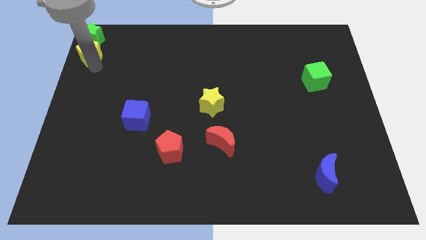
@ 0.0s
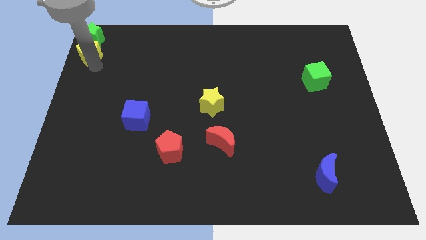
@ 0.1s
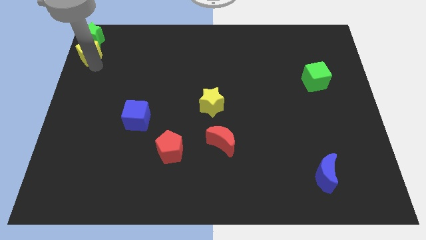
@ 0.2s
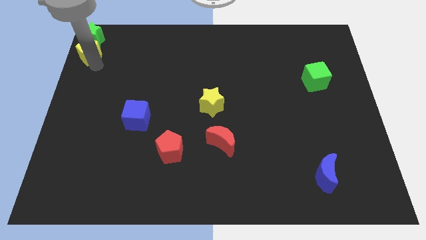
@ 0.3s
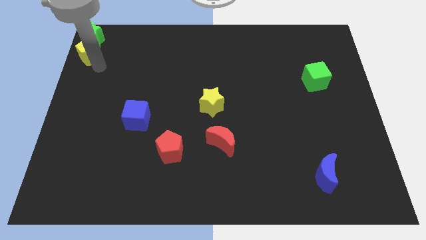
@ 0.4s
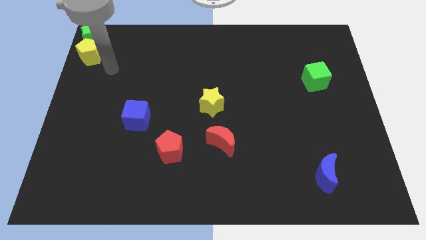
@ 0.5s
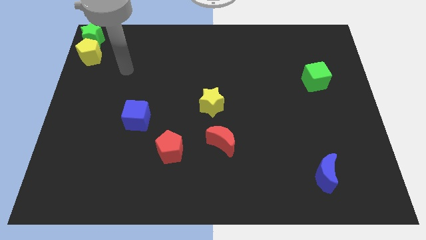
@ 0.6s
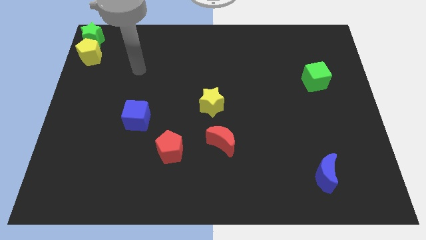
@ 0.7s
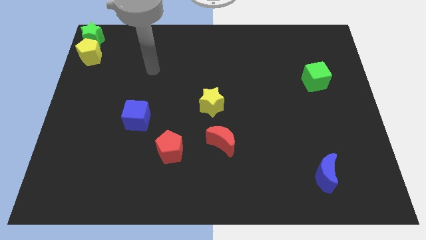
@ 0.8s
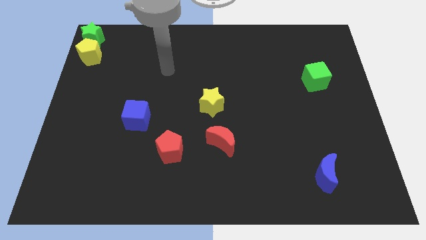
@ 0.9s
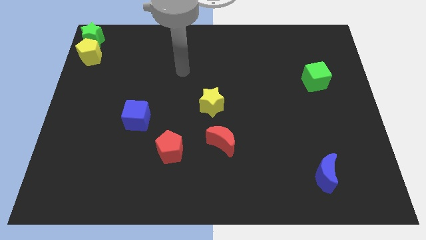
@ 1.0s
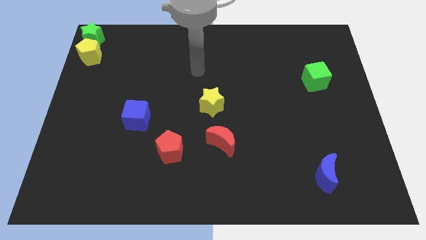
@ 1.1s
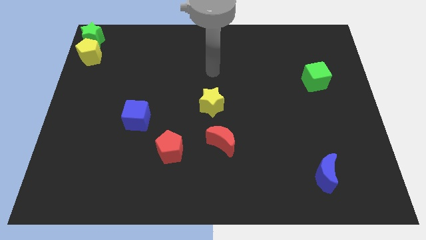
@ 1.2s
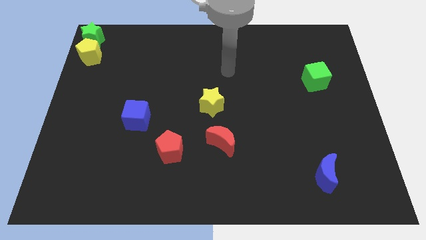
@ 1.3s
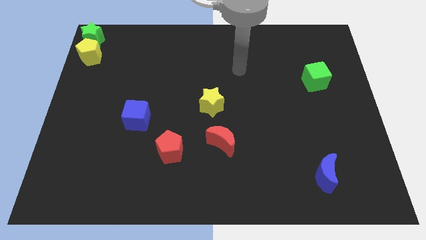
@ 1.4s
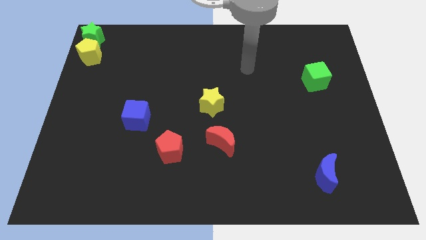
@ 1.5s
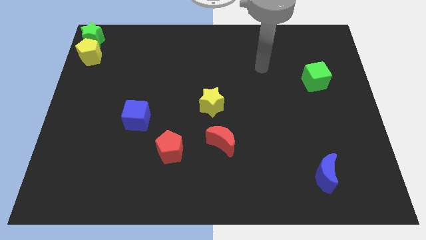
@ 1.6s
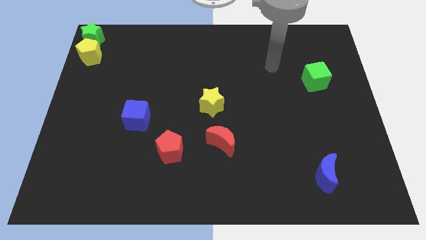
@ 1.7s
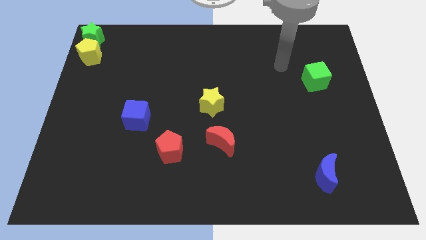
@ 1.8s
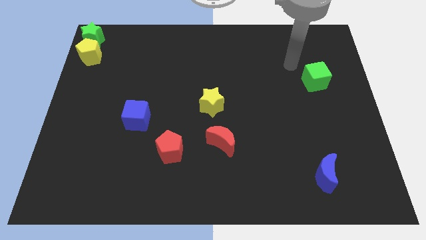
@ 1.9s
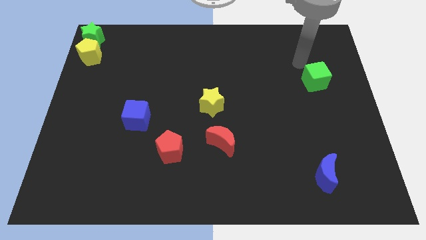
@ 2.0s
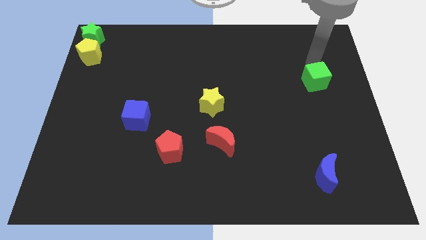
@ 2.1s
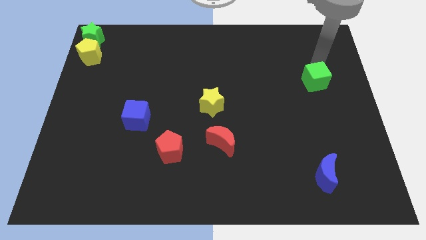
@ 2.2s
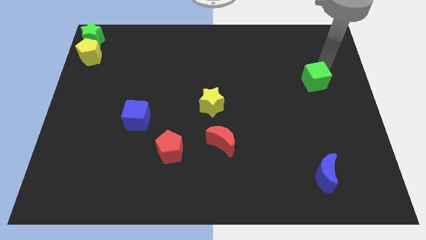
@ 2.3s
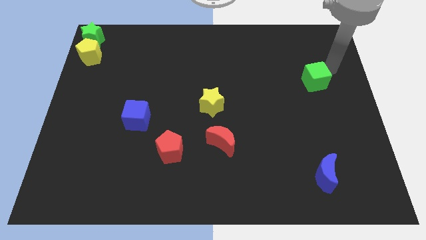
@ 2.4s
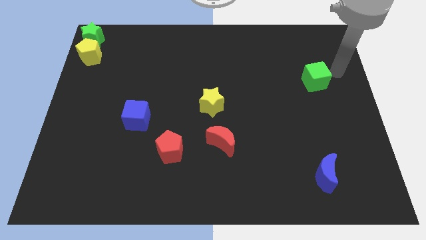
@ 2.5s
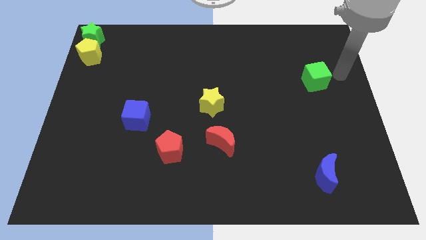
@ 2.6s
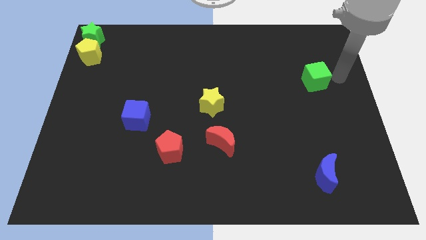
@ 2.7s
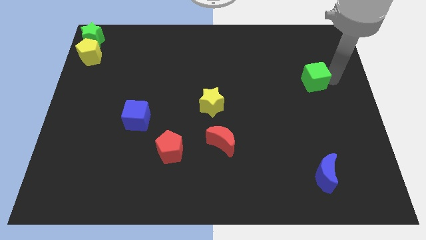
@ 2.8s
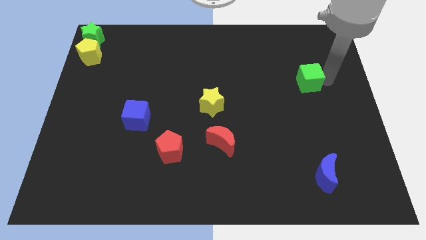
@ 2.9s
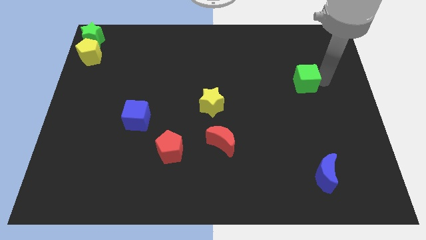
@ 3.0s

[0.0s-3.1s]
tap your hand on the right side of green cube

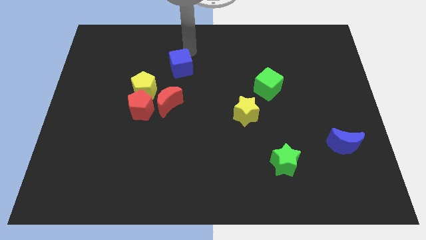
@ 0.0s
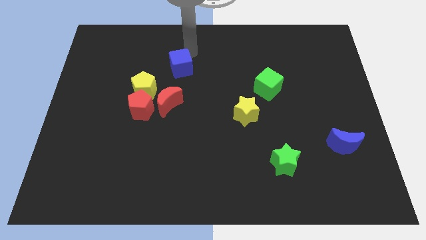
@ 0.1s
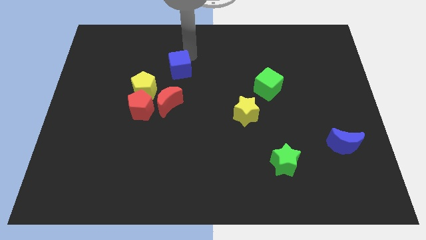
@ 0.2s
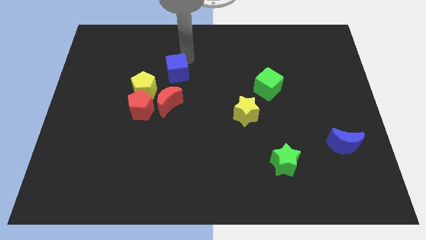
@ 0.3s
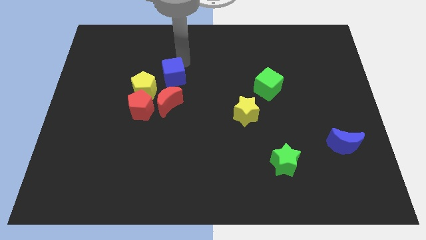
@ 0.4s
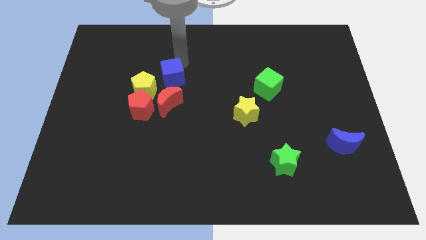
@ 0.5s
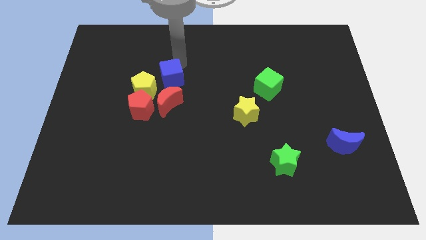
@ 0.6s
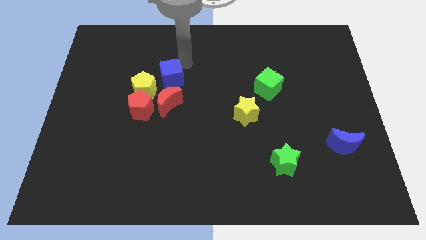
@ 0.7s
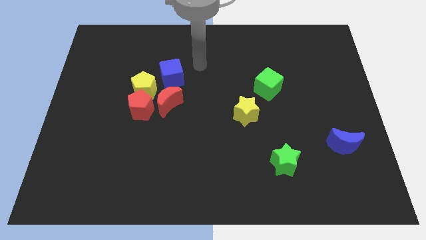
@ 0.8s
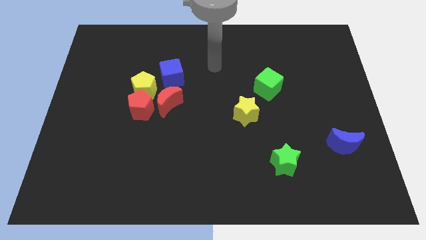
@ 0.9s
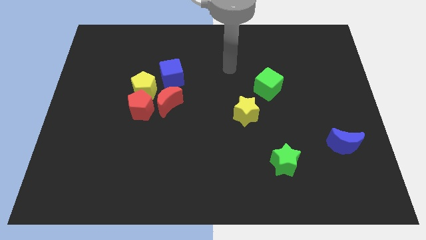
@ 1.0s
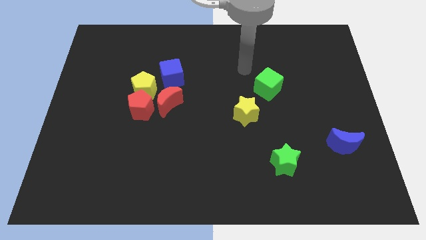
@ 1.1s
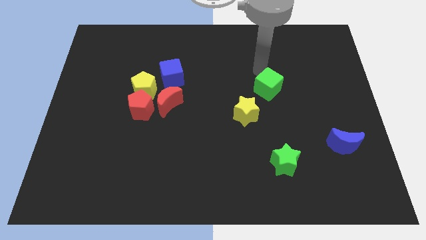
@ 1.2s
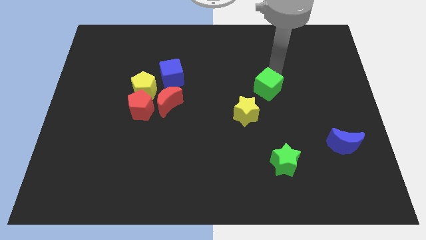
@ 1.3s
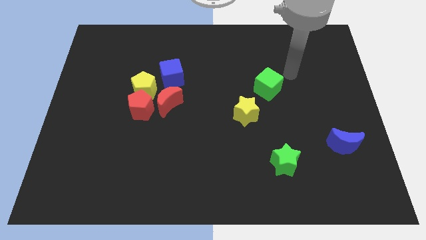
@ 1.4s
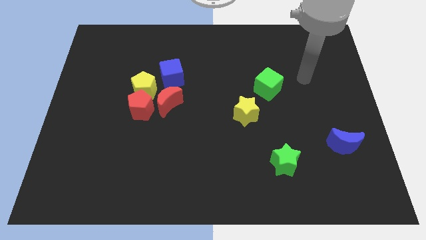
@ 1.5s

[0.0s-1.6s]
move the blue cube above the red moon

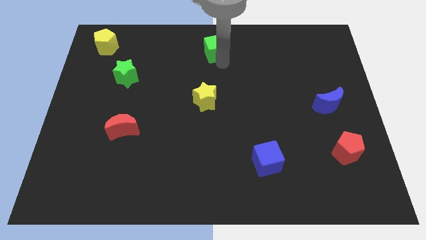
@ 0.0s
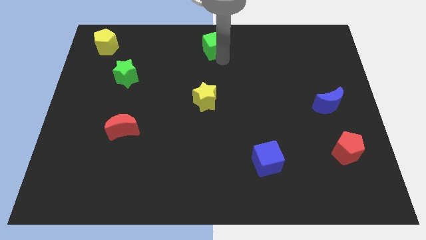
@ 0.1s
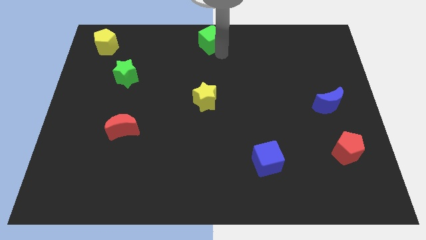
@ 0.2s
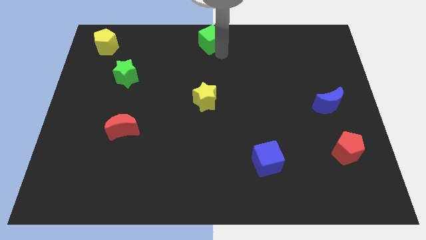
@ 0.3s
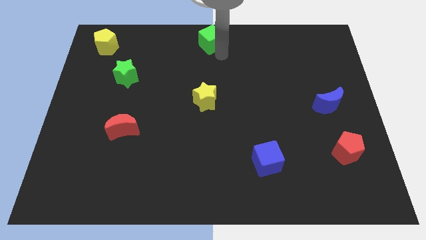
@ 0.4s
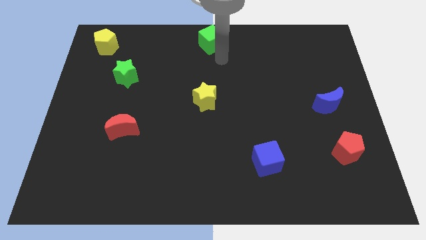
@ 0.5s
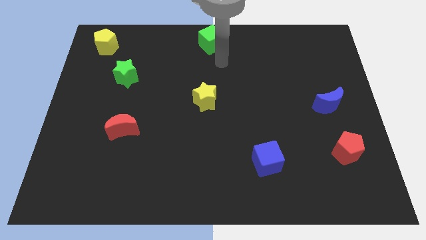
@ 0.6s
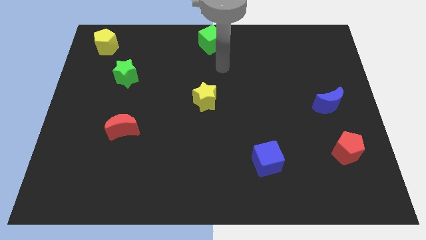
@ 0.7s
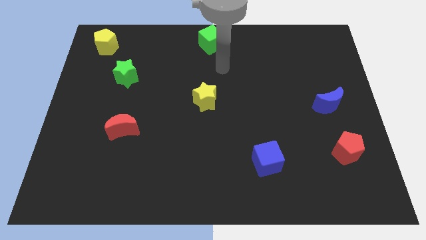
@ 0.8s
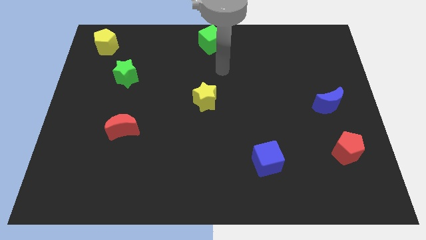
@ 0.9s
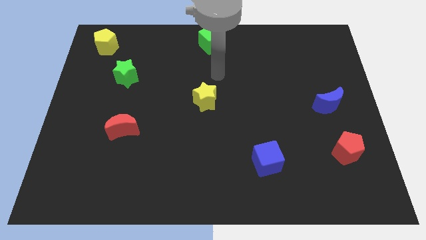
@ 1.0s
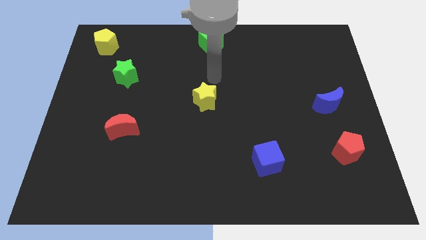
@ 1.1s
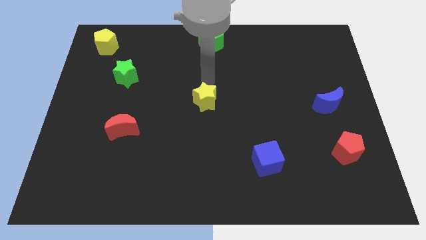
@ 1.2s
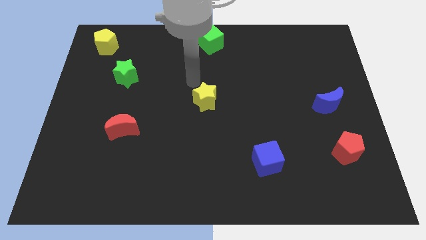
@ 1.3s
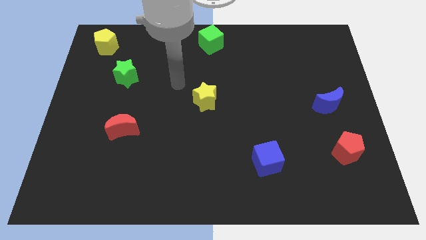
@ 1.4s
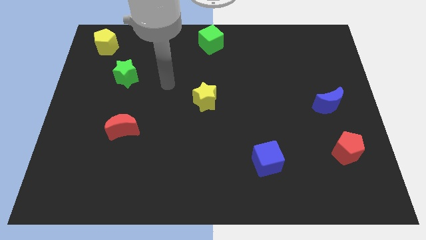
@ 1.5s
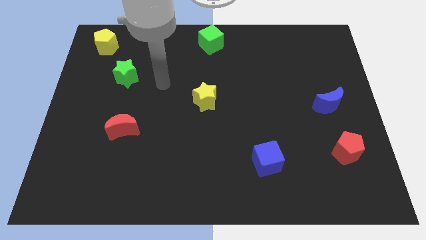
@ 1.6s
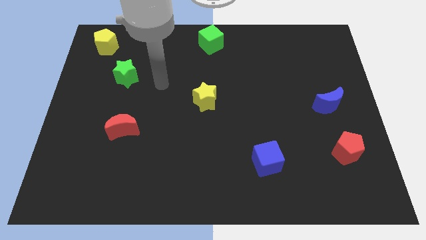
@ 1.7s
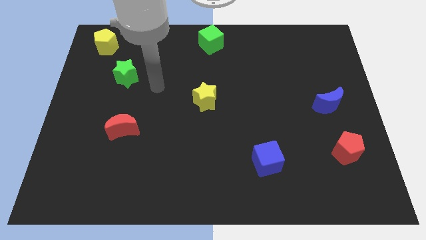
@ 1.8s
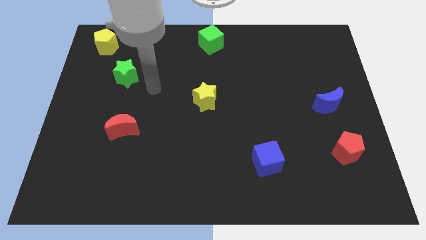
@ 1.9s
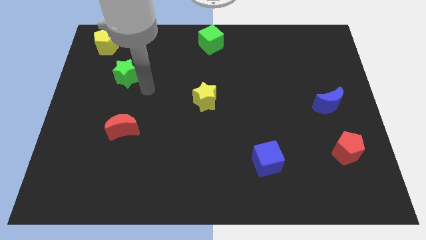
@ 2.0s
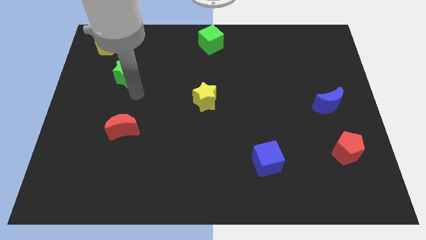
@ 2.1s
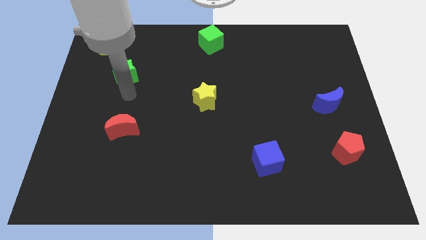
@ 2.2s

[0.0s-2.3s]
place the green cube in the top middle of the board

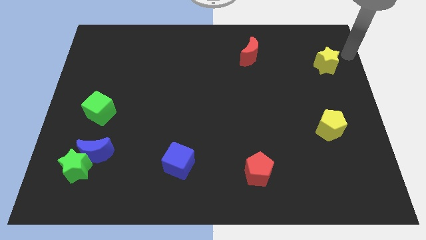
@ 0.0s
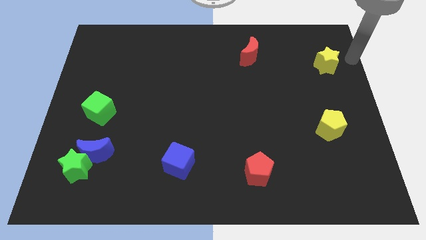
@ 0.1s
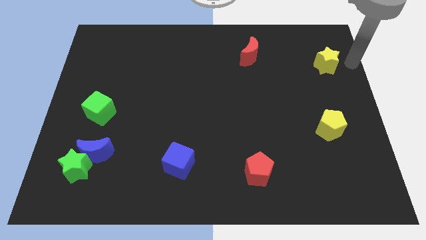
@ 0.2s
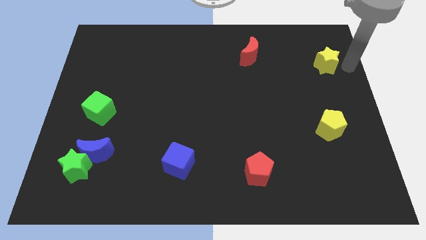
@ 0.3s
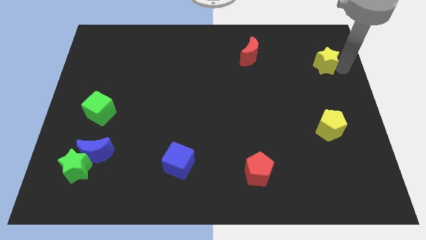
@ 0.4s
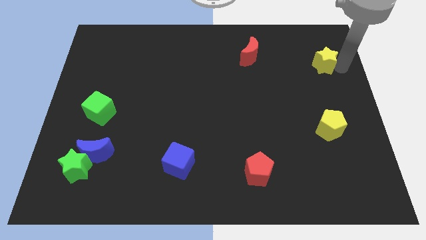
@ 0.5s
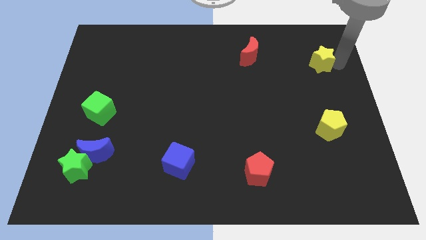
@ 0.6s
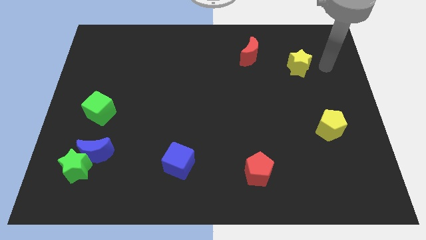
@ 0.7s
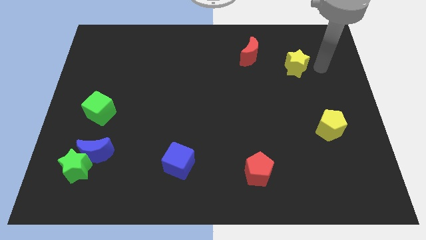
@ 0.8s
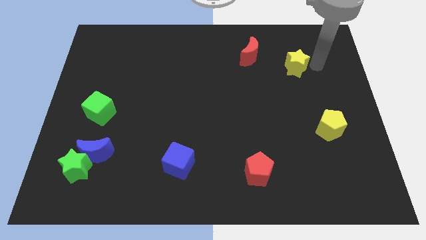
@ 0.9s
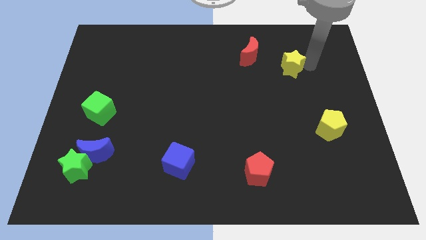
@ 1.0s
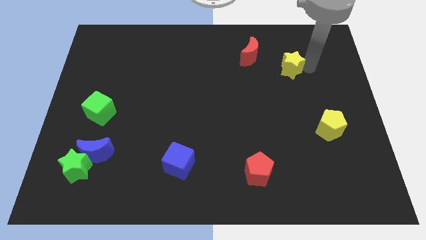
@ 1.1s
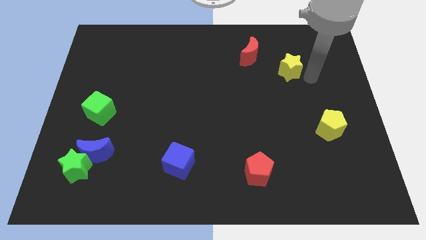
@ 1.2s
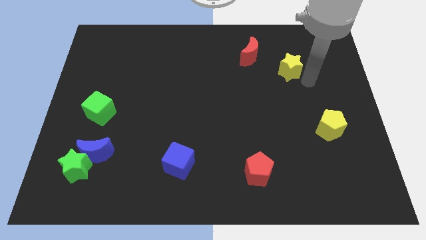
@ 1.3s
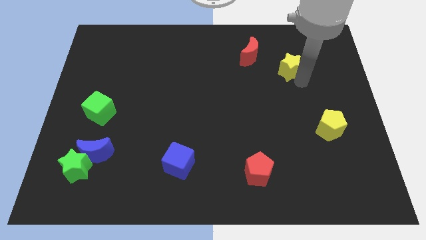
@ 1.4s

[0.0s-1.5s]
slide the yellow star to the bottom right of the red moon

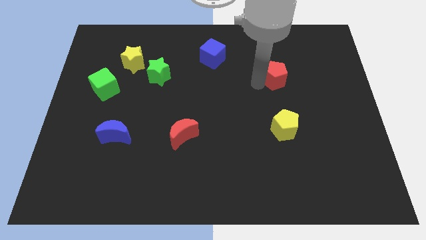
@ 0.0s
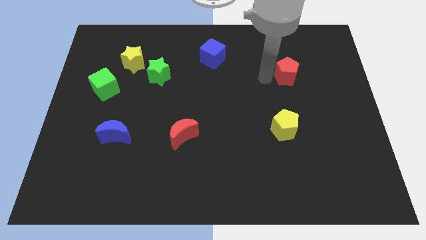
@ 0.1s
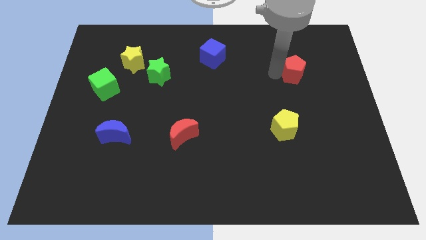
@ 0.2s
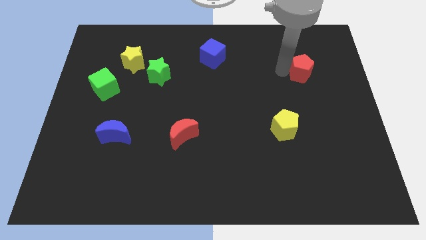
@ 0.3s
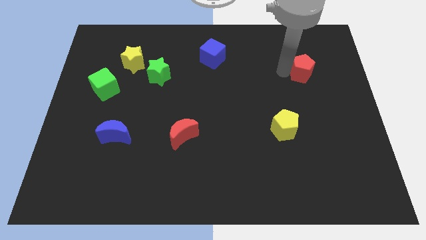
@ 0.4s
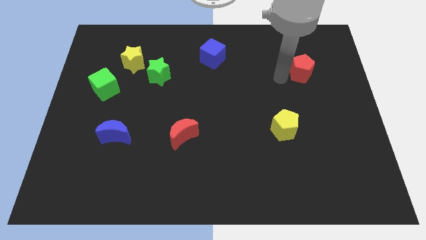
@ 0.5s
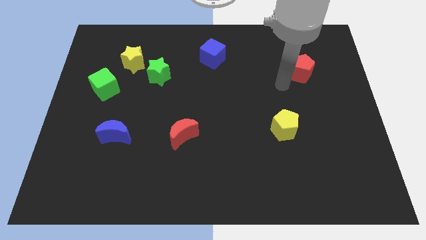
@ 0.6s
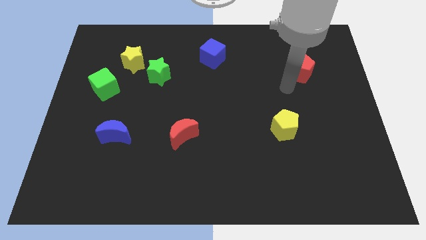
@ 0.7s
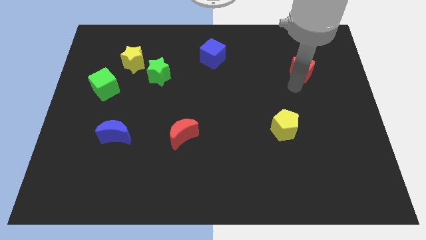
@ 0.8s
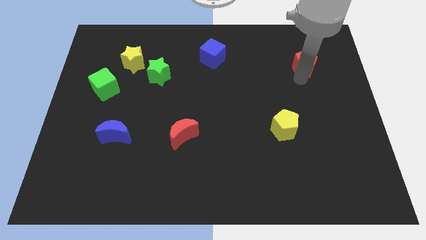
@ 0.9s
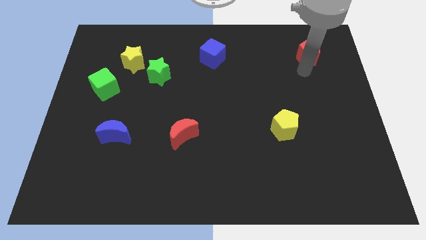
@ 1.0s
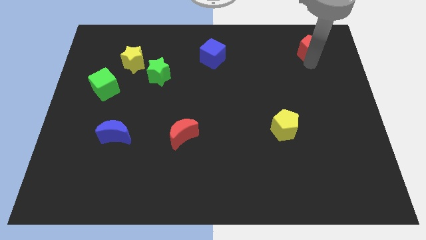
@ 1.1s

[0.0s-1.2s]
move the red pentagon to the top right of the board
